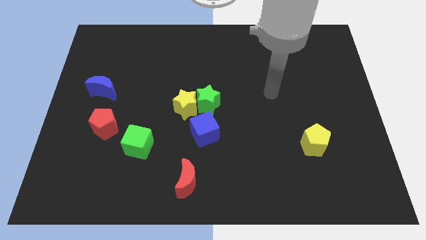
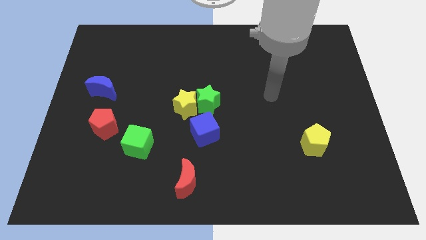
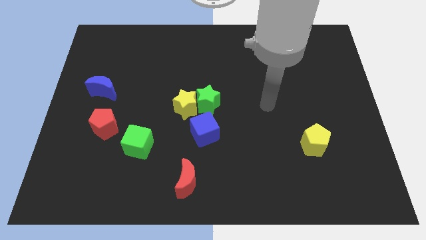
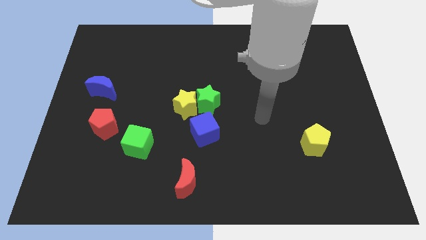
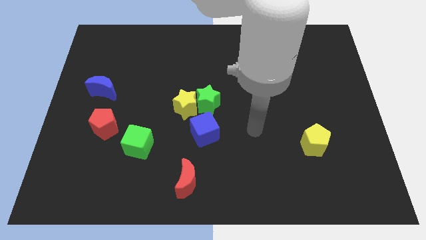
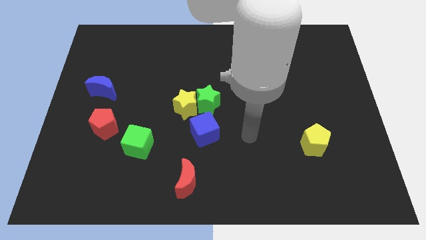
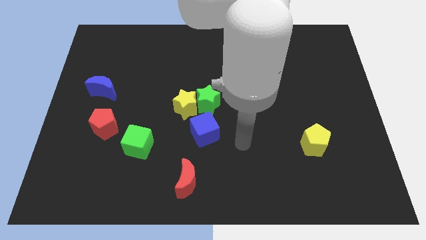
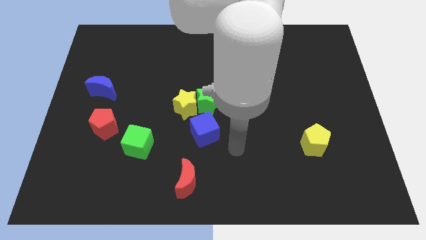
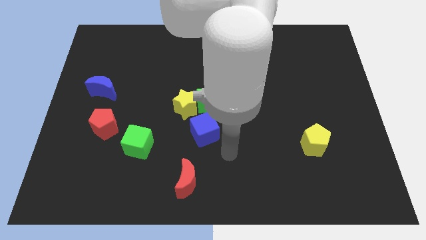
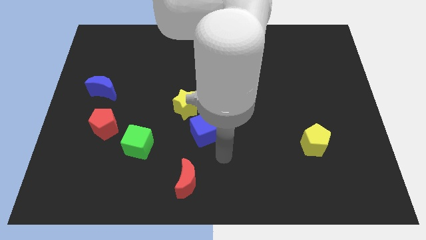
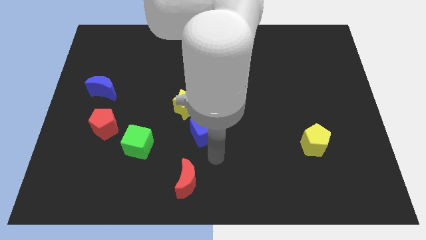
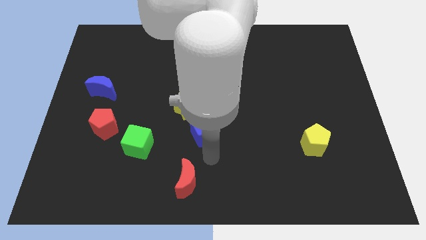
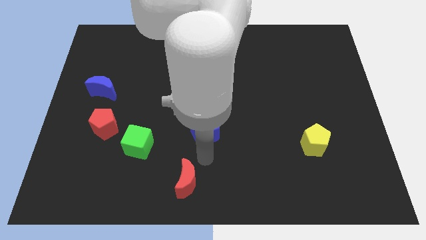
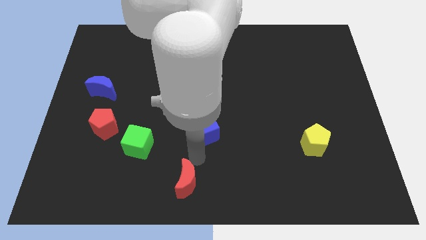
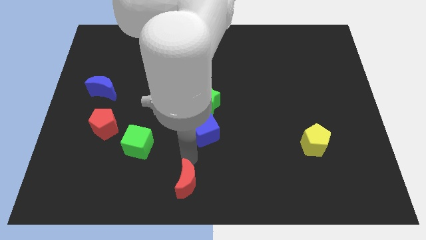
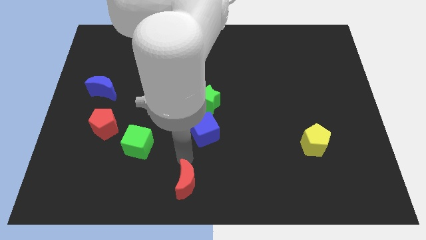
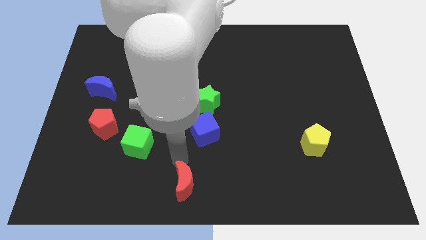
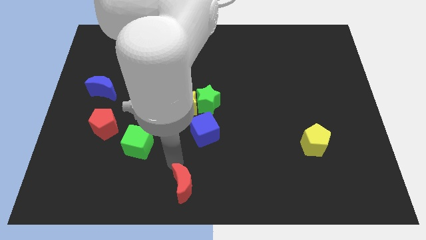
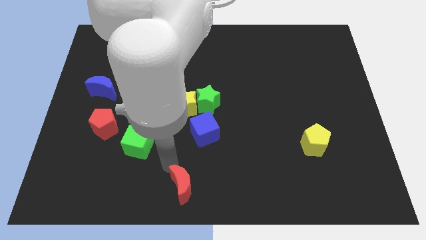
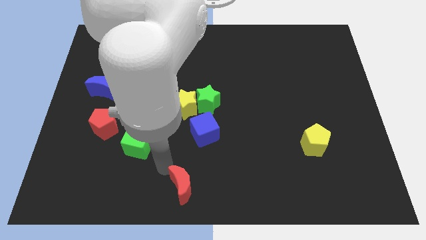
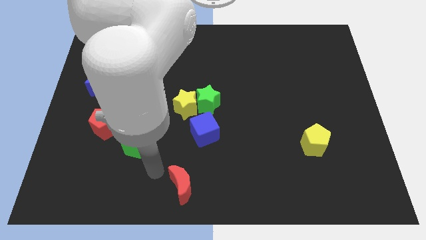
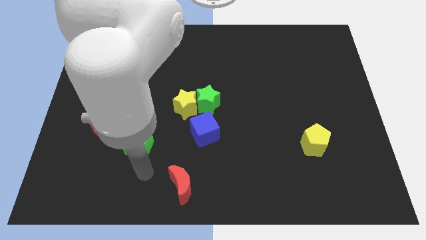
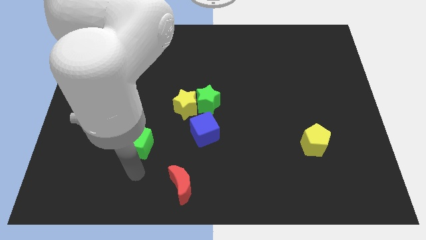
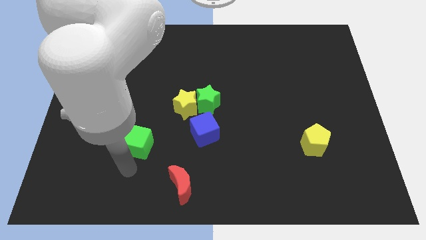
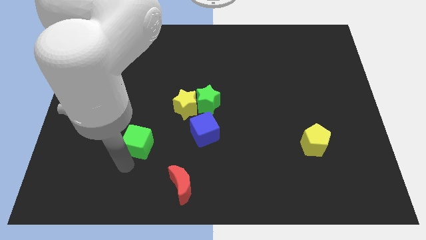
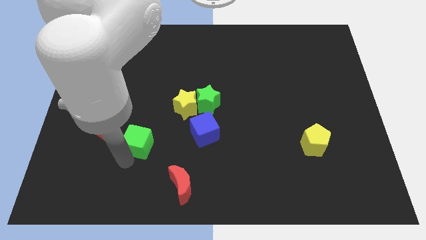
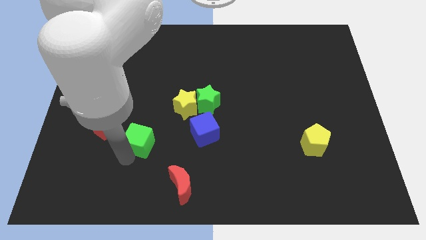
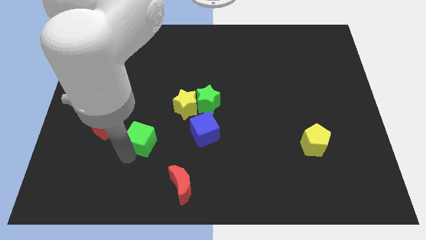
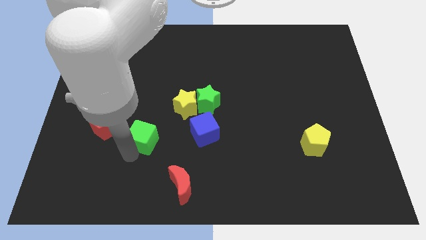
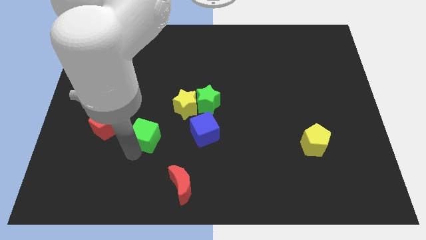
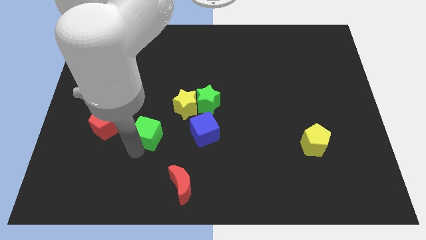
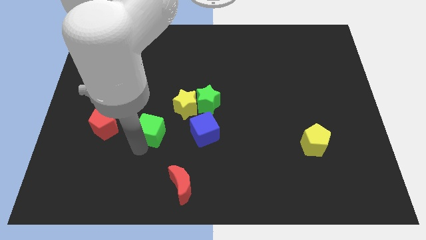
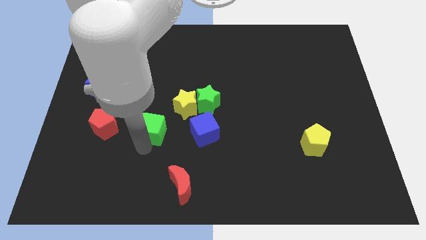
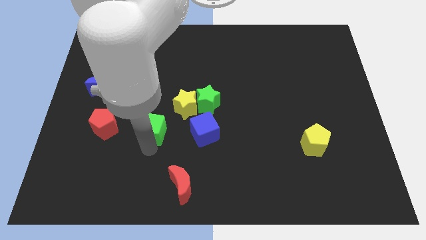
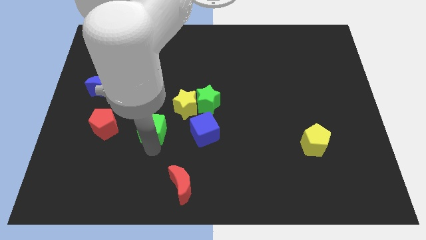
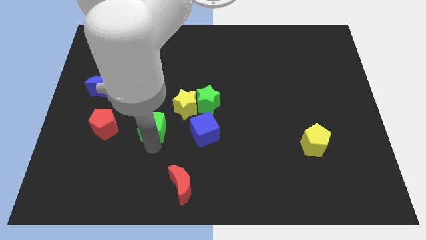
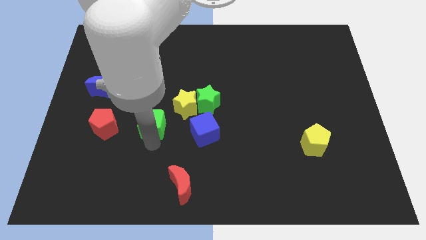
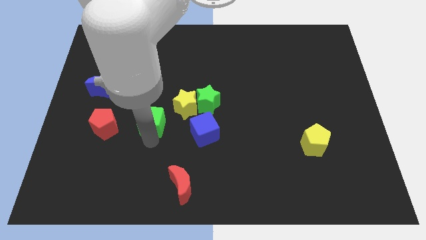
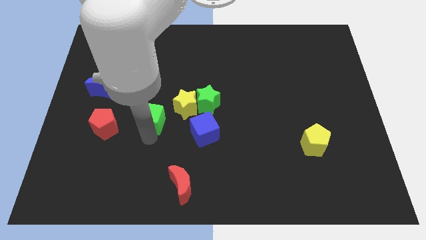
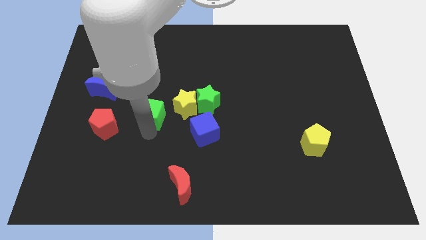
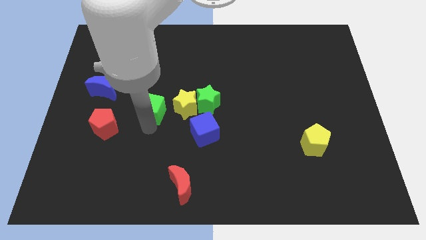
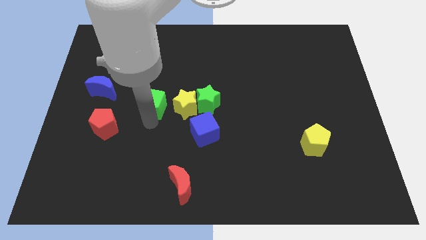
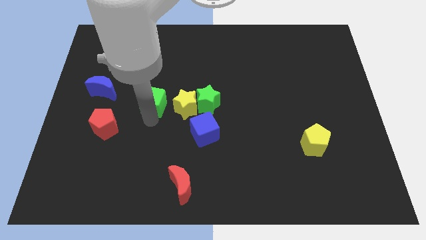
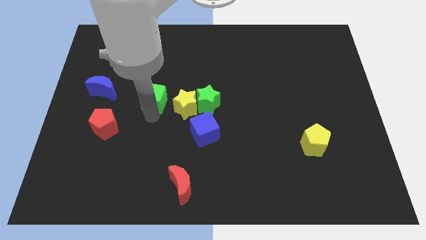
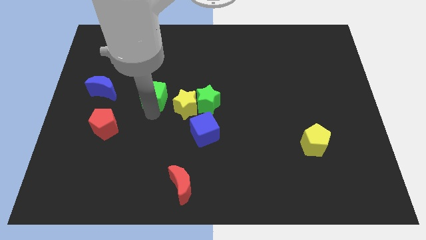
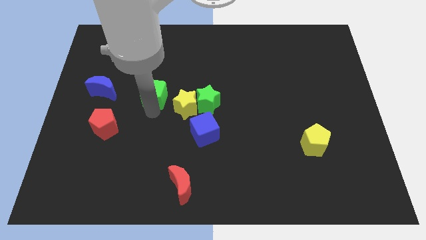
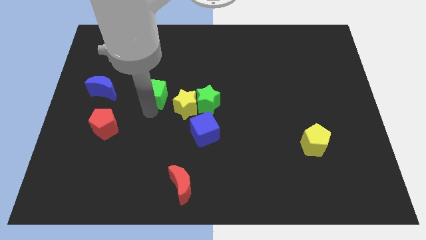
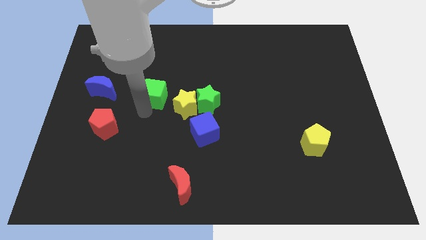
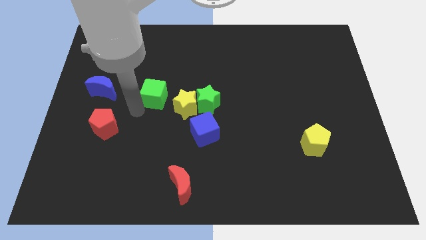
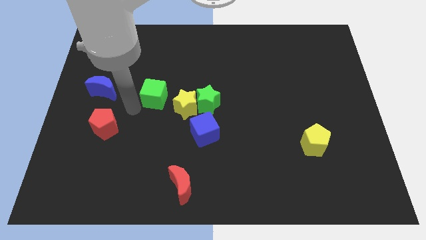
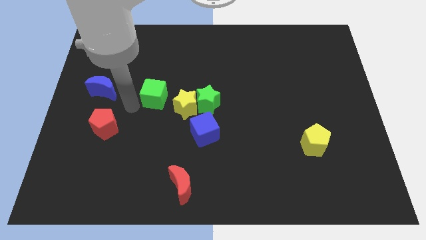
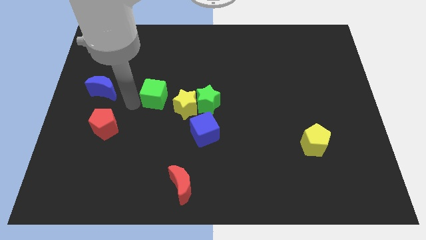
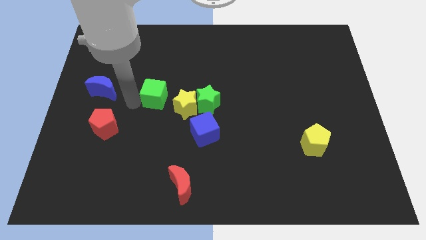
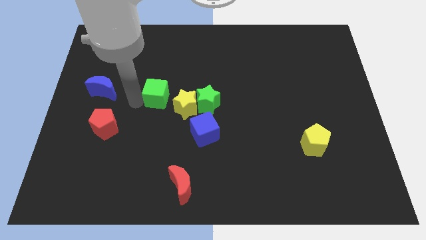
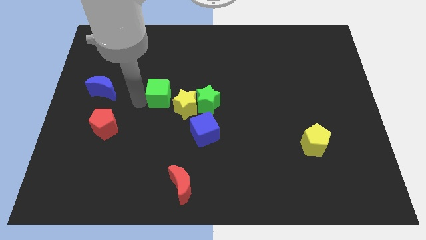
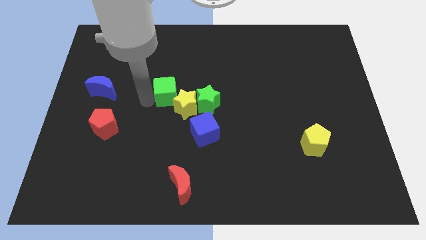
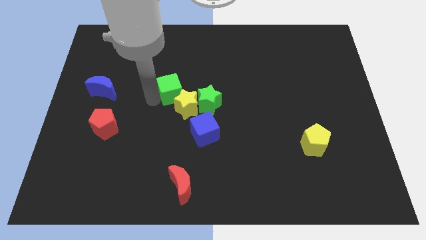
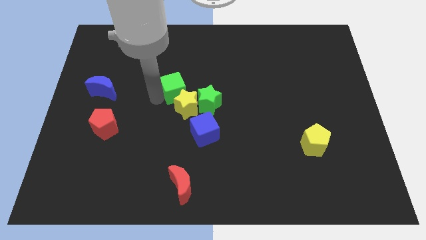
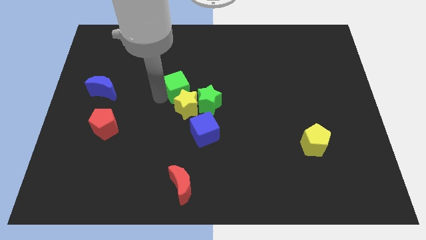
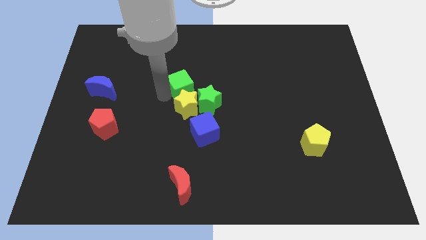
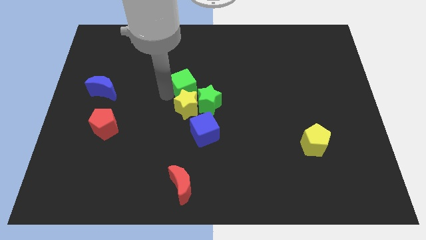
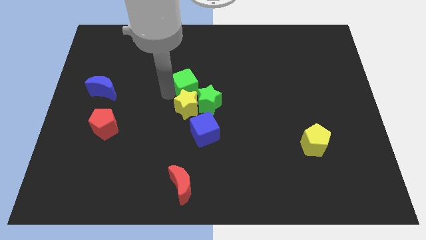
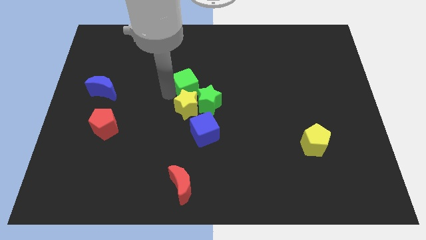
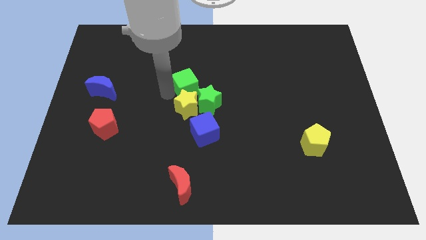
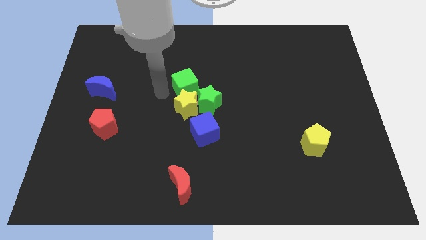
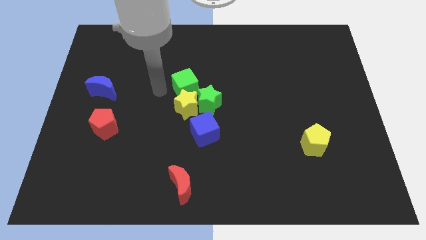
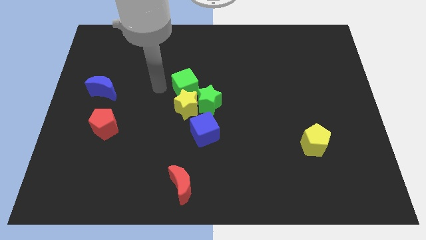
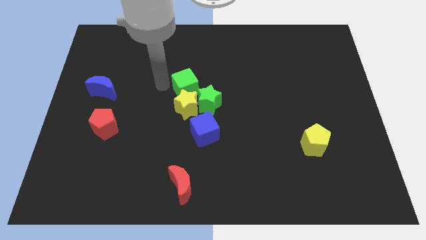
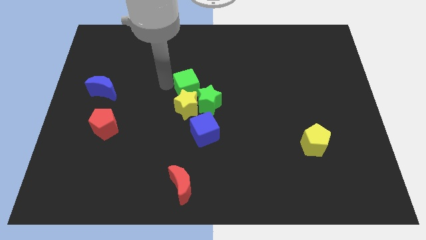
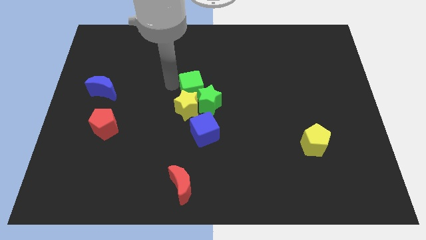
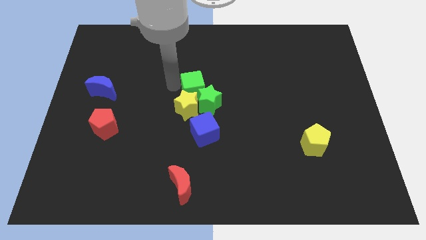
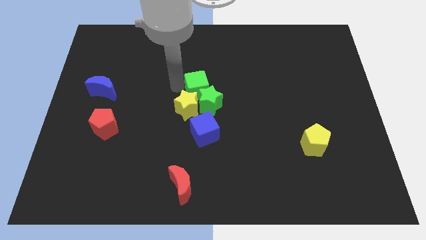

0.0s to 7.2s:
slide the green cube towards the green star

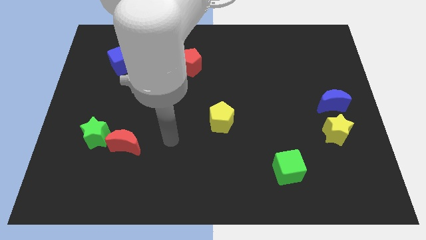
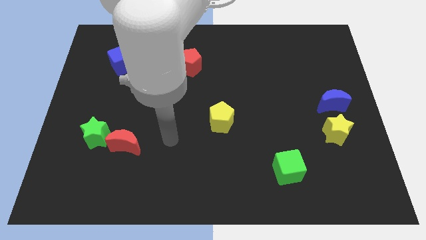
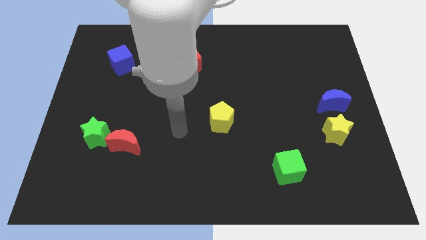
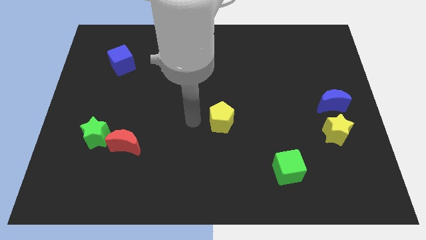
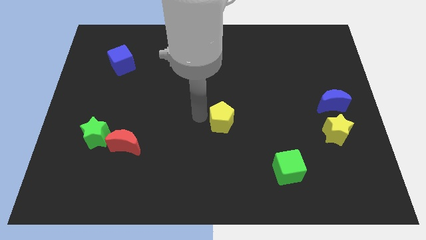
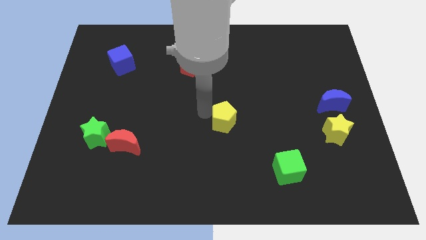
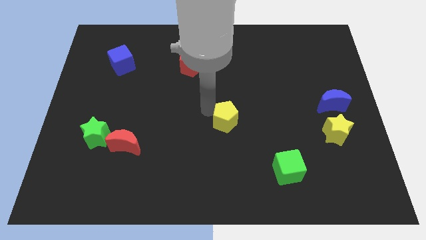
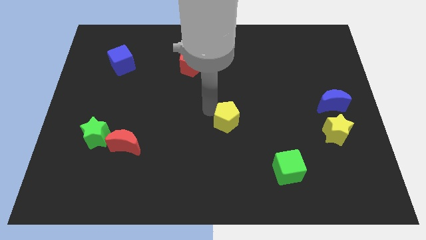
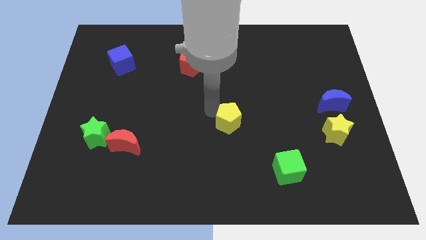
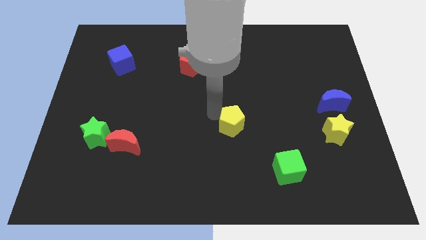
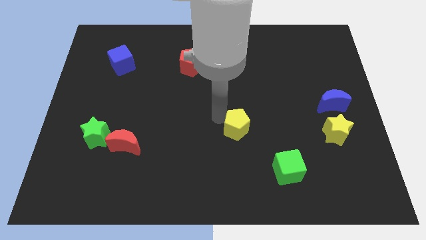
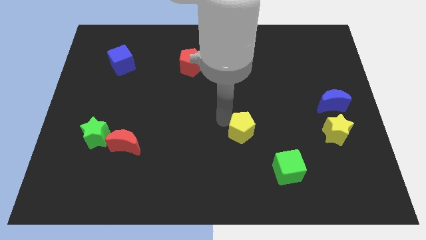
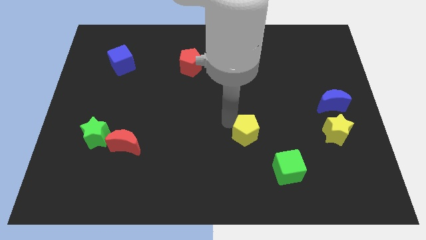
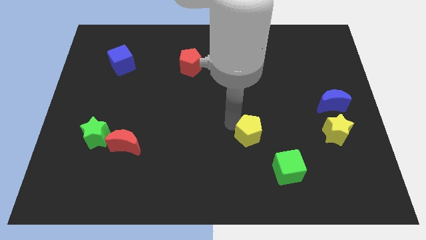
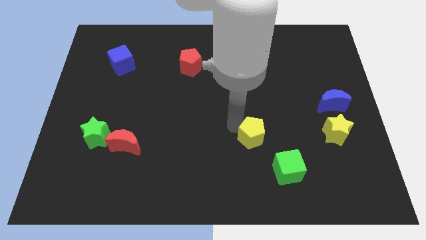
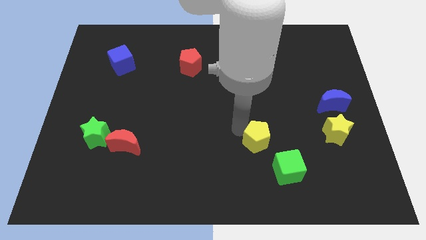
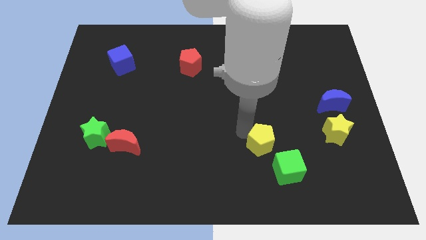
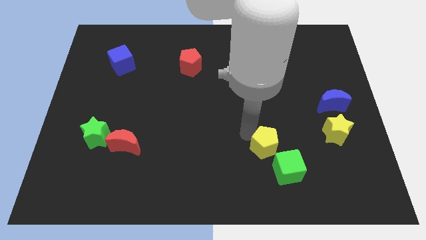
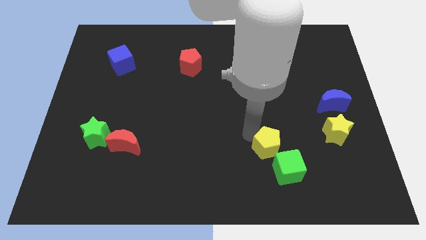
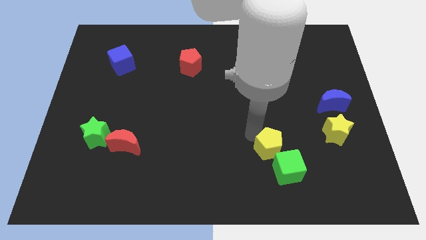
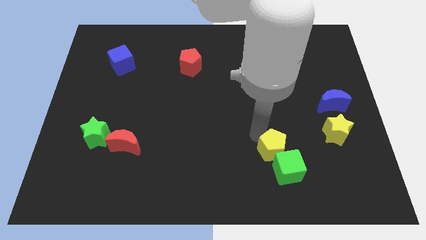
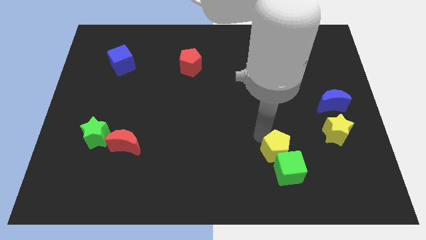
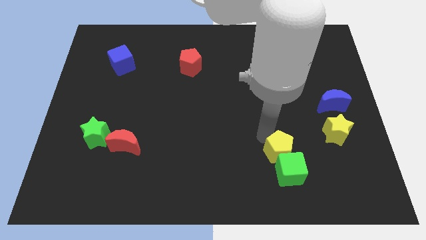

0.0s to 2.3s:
slide the yellow pentagon close to the green cube
